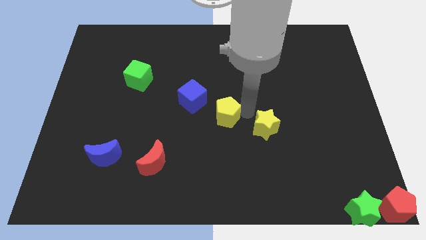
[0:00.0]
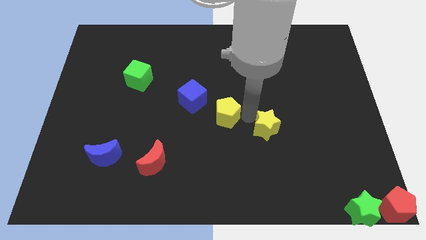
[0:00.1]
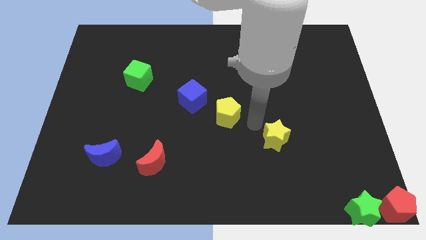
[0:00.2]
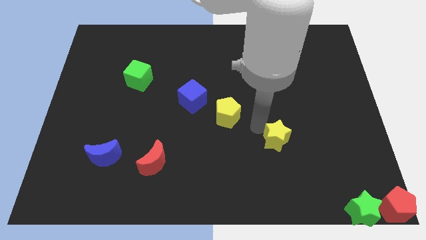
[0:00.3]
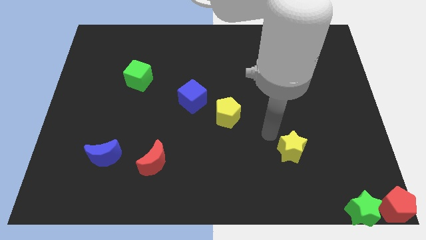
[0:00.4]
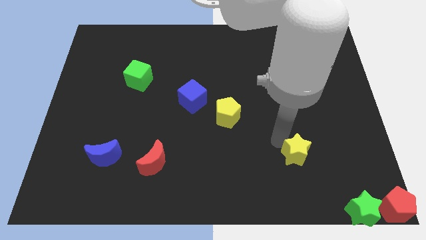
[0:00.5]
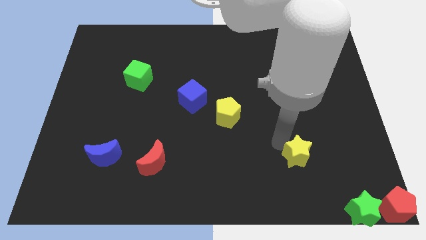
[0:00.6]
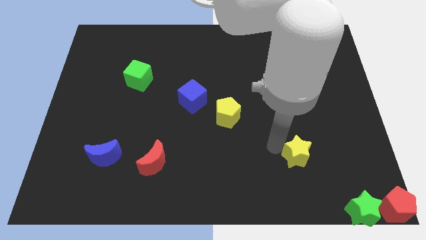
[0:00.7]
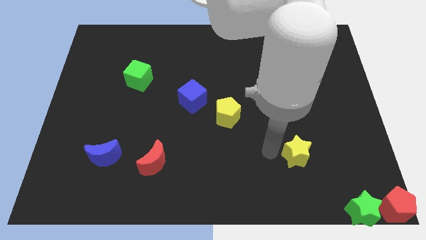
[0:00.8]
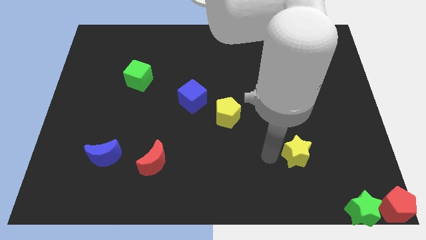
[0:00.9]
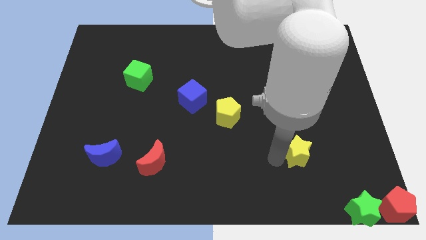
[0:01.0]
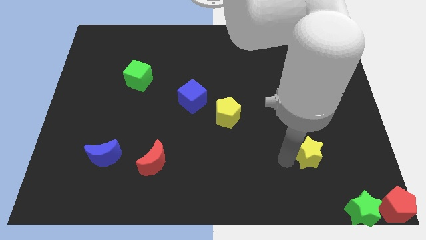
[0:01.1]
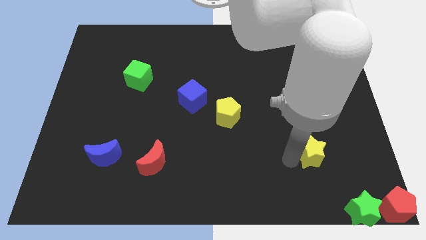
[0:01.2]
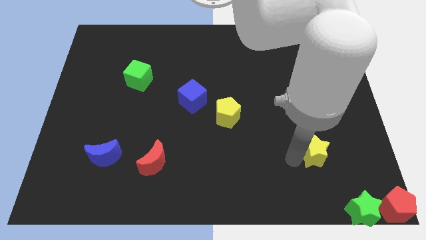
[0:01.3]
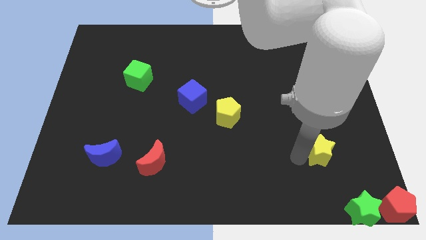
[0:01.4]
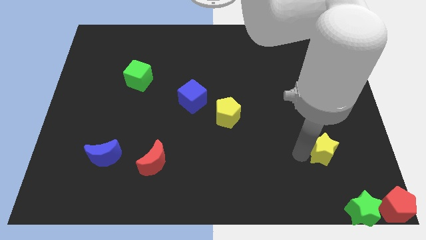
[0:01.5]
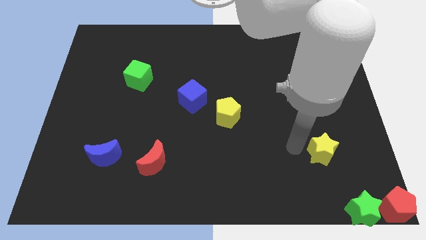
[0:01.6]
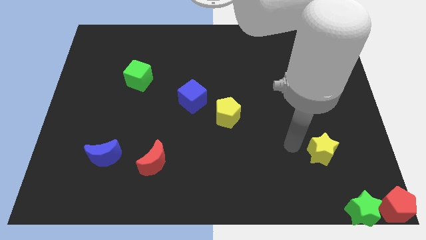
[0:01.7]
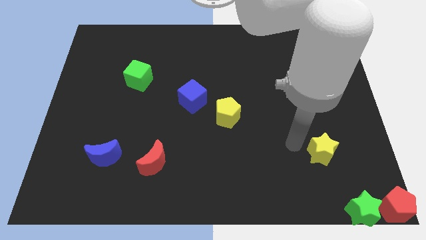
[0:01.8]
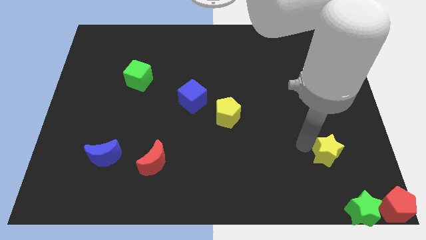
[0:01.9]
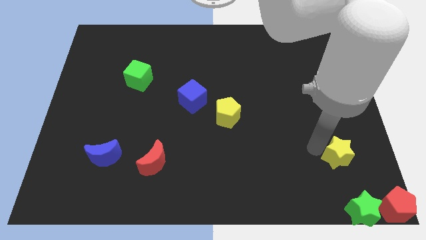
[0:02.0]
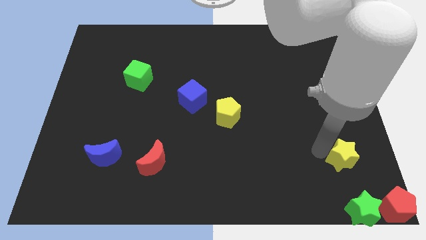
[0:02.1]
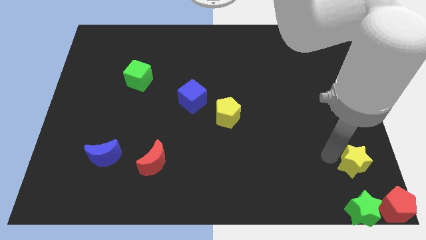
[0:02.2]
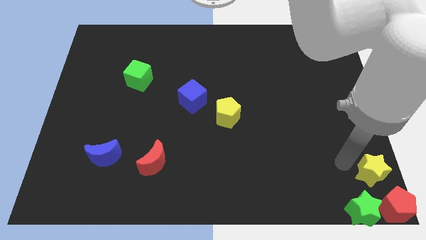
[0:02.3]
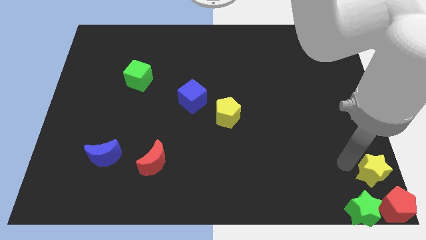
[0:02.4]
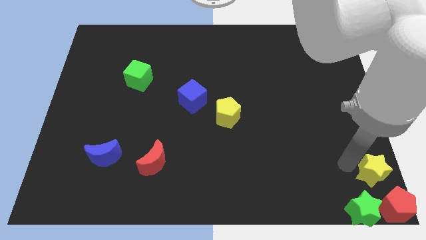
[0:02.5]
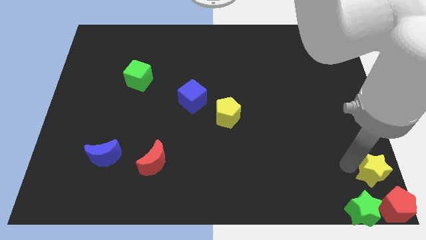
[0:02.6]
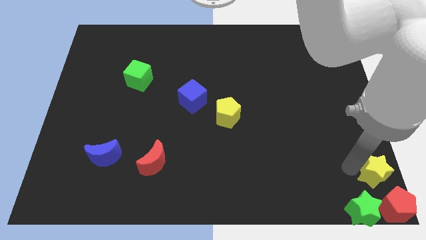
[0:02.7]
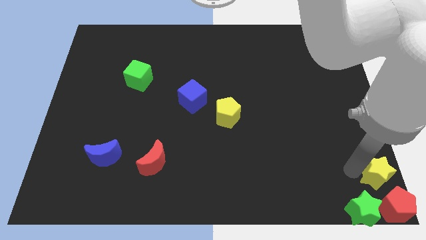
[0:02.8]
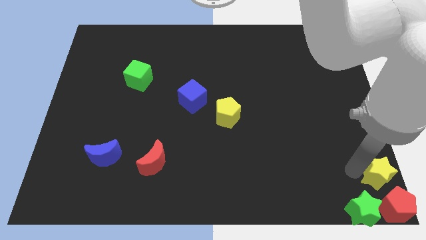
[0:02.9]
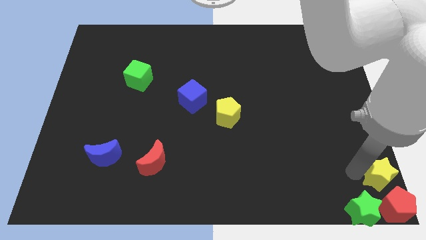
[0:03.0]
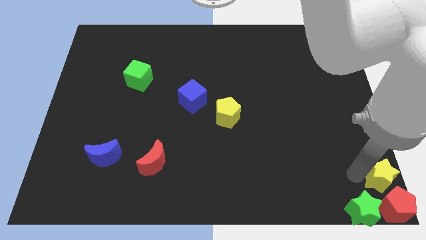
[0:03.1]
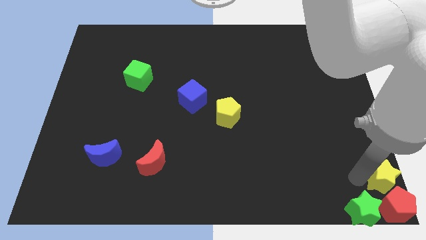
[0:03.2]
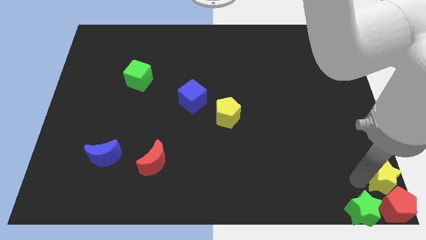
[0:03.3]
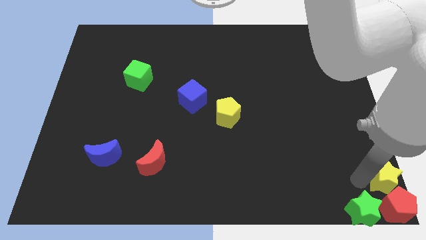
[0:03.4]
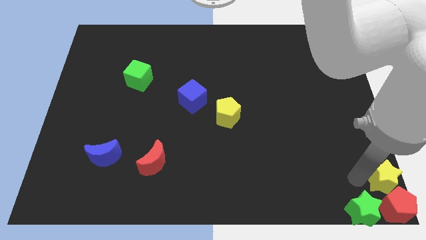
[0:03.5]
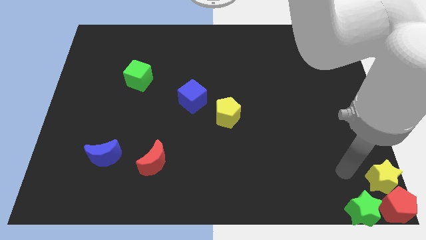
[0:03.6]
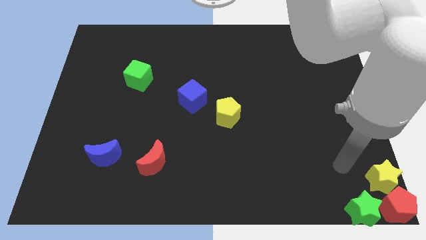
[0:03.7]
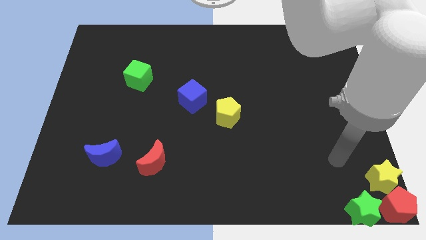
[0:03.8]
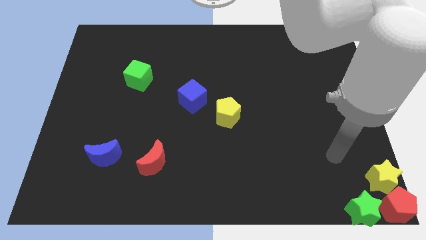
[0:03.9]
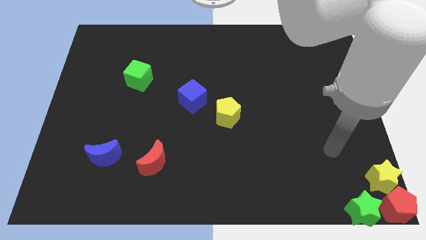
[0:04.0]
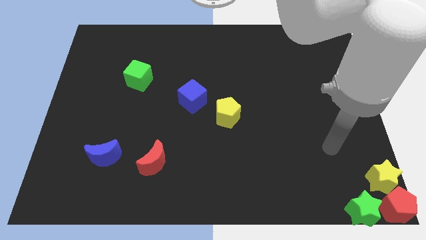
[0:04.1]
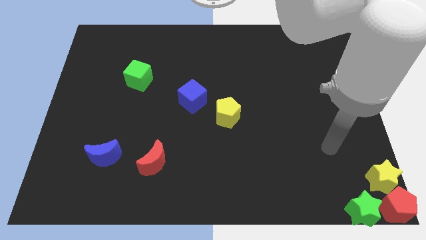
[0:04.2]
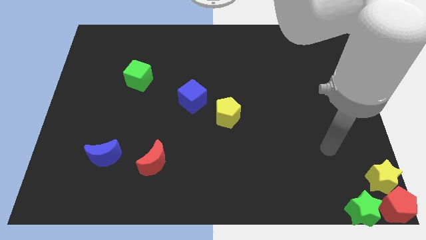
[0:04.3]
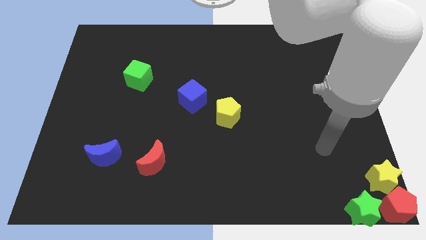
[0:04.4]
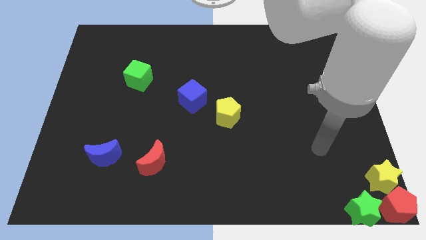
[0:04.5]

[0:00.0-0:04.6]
move the yellow star above the red pentagon

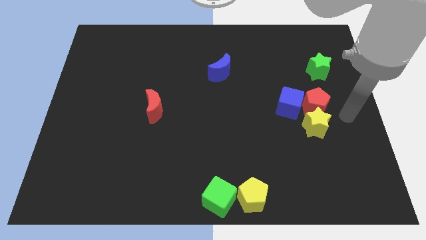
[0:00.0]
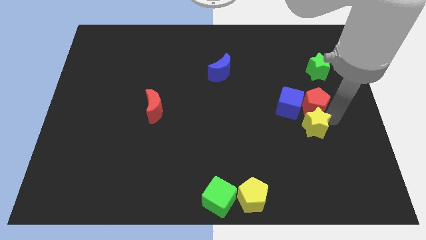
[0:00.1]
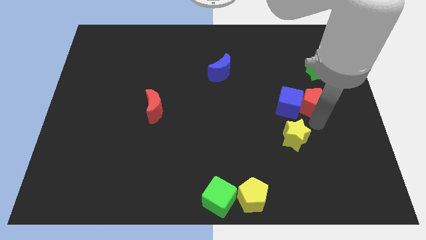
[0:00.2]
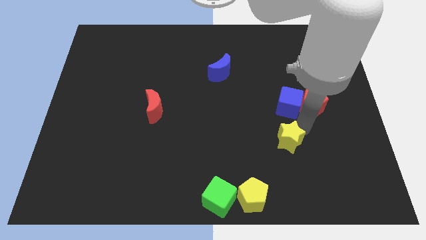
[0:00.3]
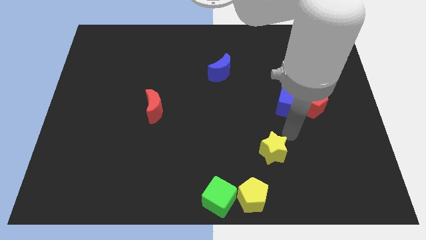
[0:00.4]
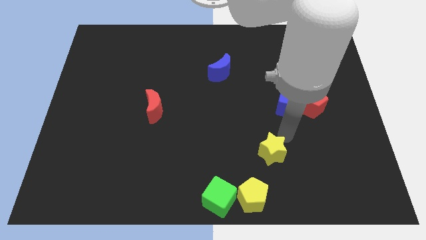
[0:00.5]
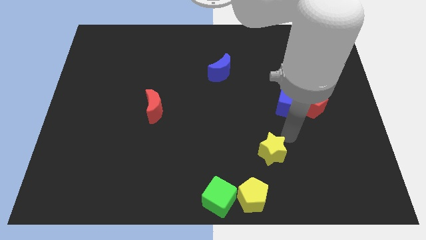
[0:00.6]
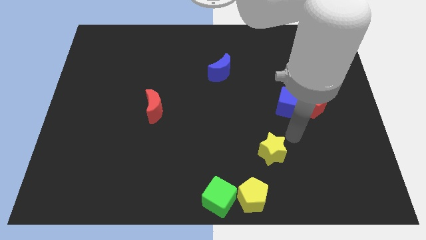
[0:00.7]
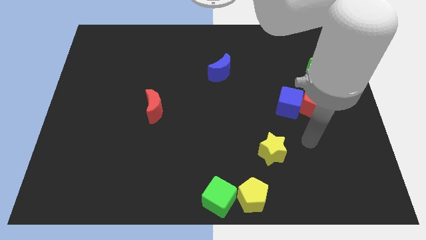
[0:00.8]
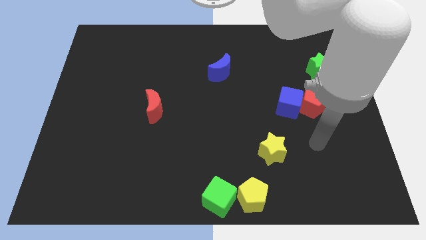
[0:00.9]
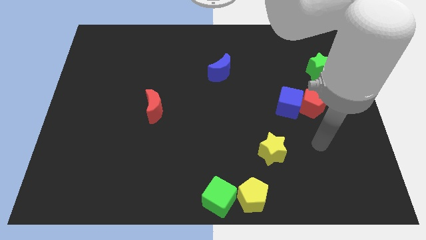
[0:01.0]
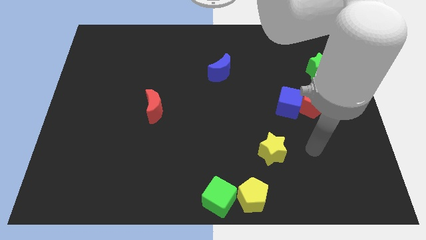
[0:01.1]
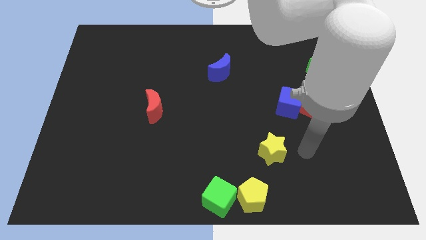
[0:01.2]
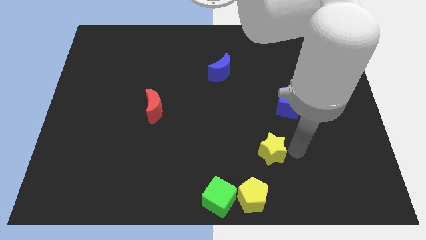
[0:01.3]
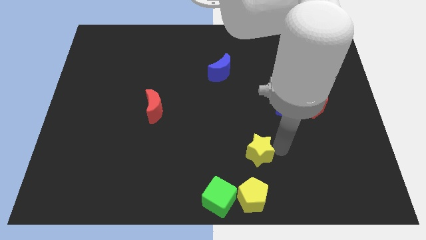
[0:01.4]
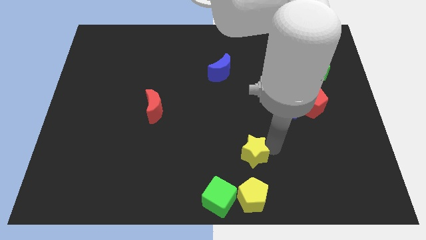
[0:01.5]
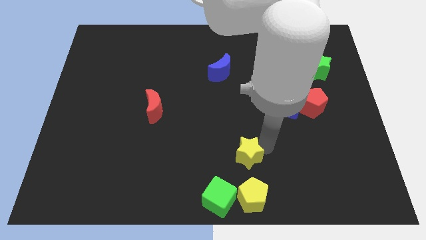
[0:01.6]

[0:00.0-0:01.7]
move yellow star above yellow pentagon

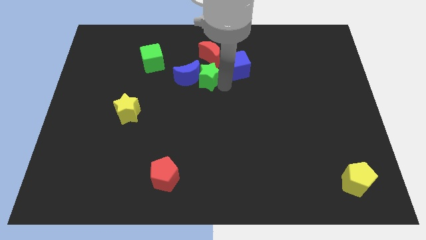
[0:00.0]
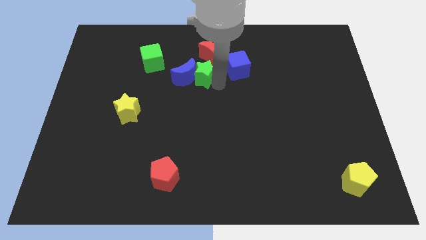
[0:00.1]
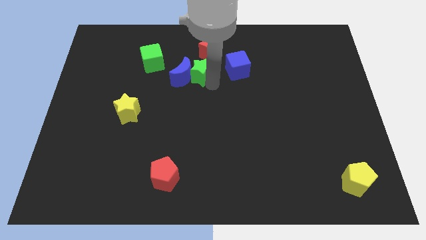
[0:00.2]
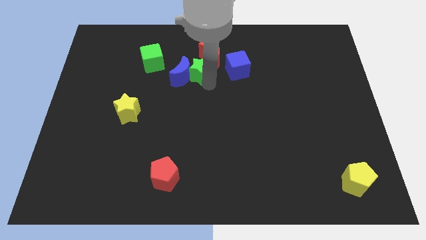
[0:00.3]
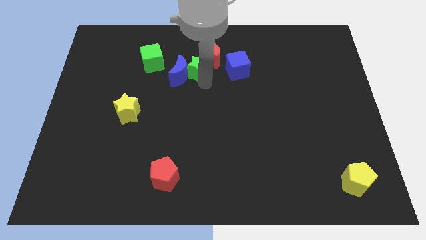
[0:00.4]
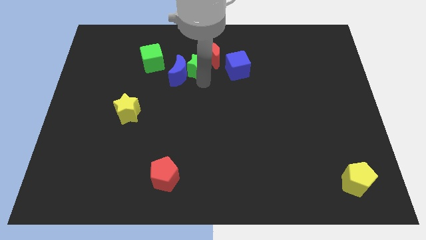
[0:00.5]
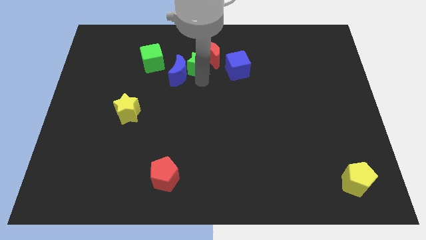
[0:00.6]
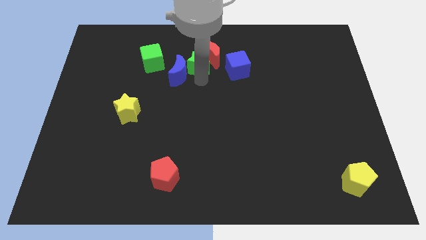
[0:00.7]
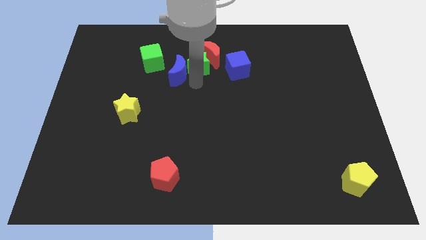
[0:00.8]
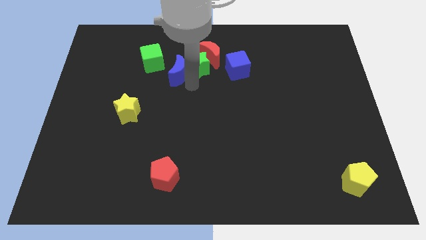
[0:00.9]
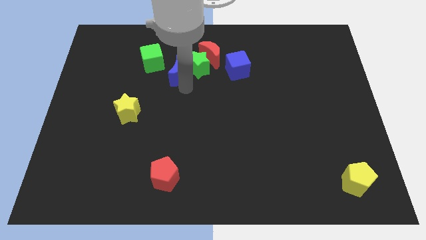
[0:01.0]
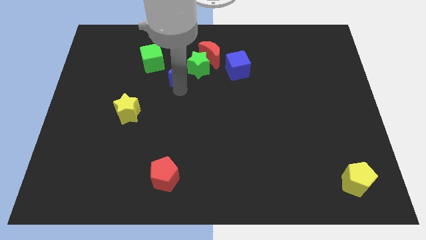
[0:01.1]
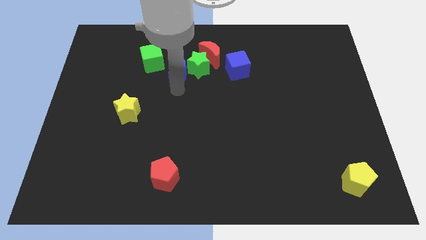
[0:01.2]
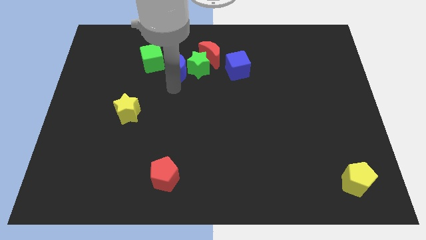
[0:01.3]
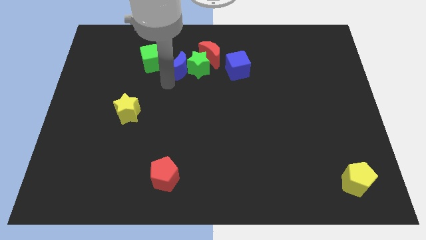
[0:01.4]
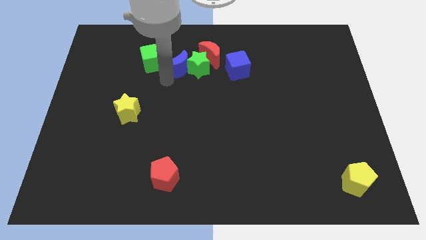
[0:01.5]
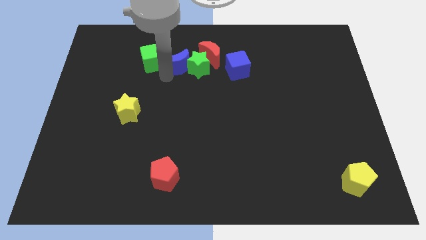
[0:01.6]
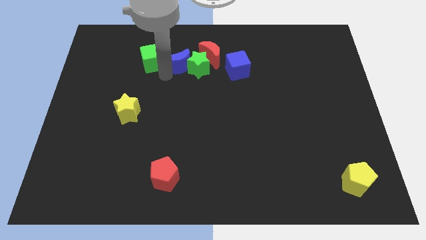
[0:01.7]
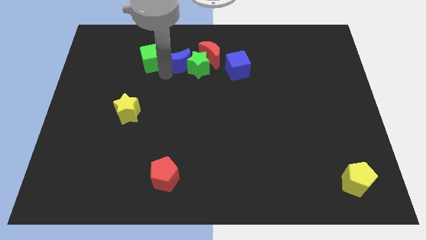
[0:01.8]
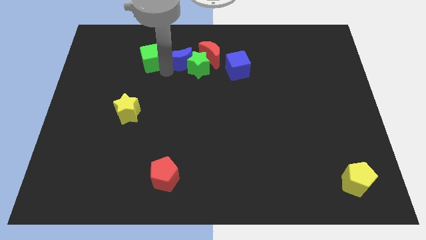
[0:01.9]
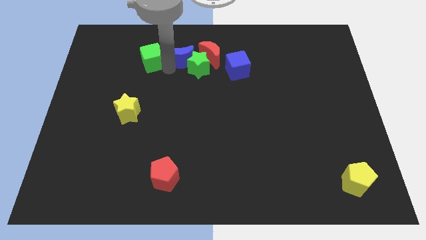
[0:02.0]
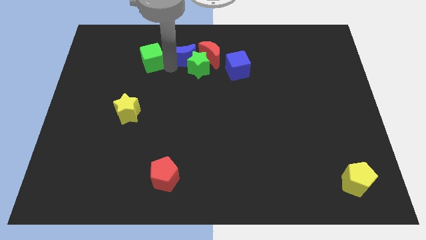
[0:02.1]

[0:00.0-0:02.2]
place blue crescent on top of green star

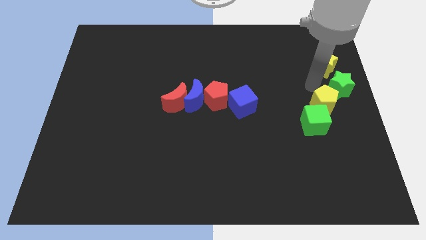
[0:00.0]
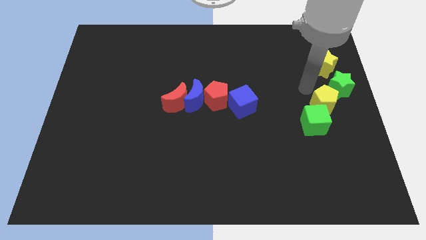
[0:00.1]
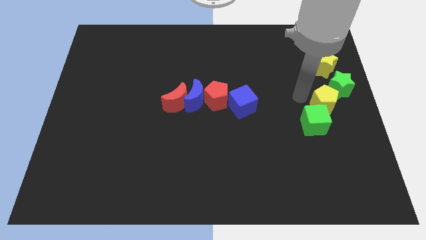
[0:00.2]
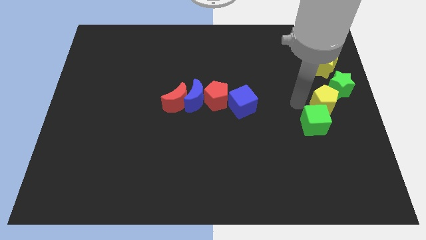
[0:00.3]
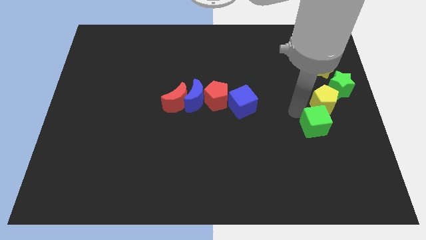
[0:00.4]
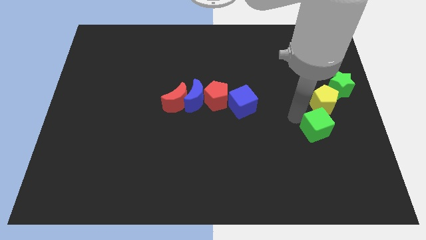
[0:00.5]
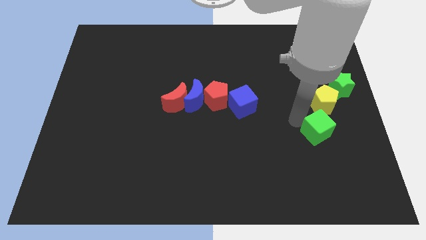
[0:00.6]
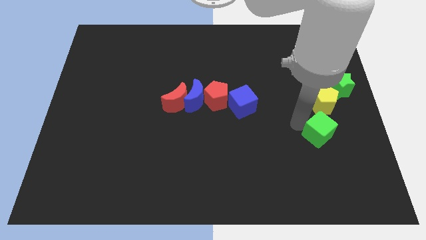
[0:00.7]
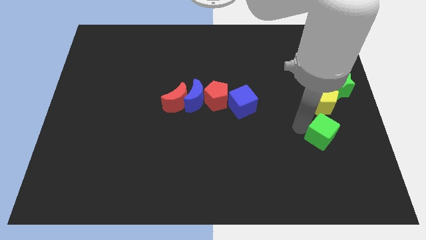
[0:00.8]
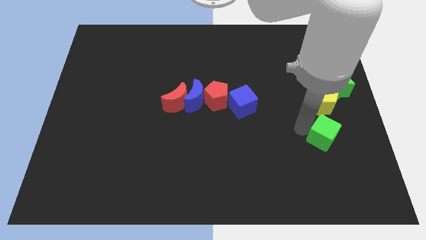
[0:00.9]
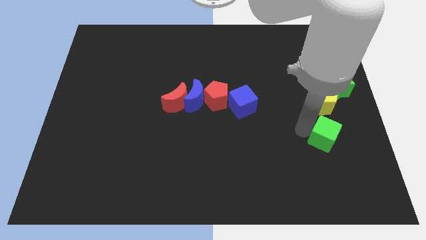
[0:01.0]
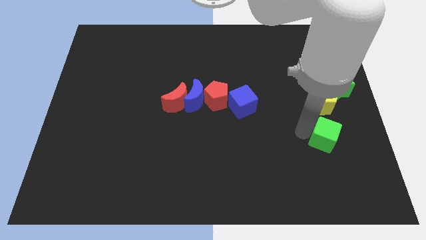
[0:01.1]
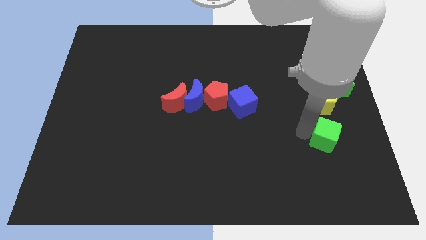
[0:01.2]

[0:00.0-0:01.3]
separate the green cube from the yellow pentagon downwards
